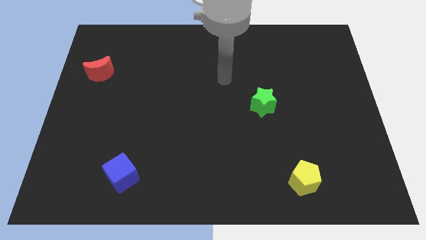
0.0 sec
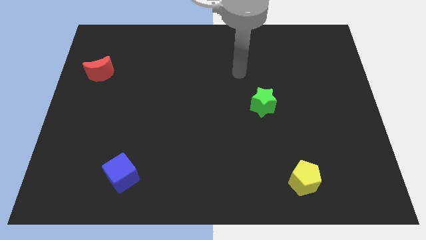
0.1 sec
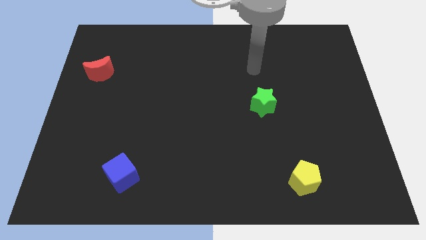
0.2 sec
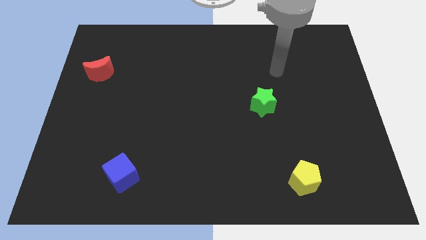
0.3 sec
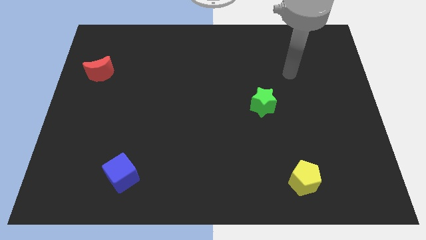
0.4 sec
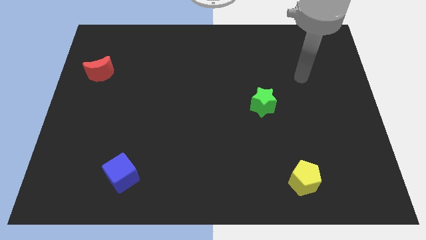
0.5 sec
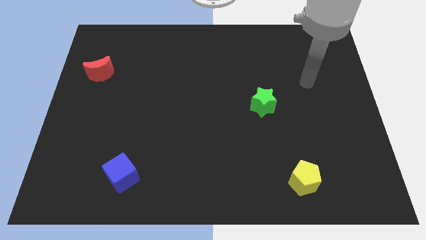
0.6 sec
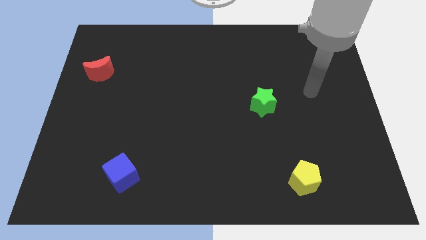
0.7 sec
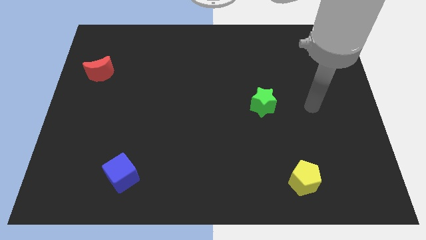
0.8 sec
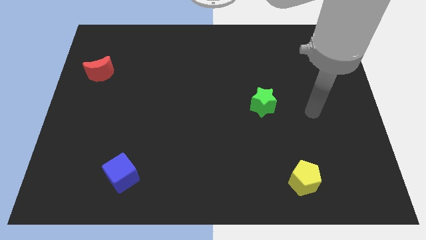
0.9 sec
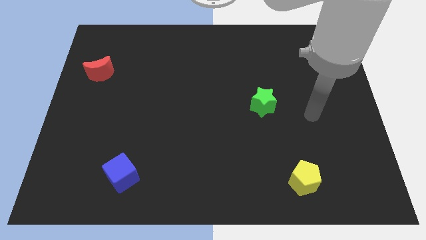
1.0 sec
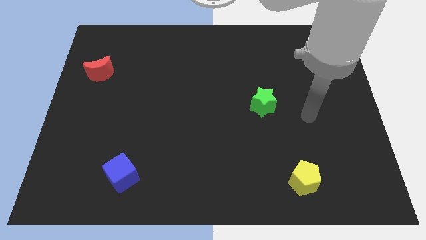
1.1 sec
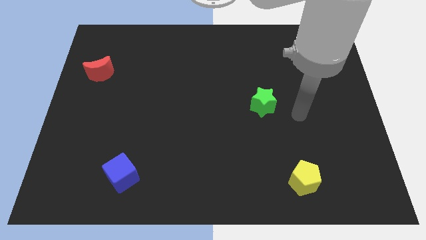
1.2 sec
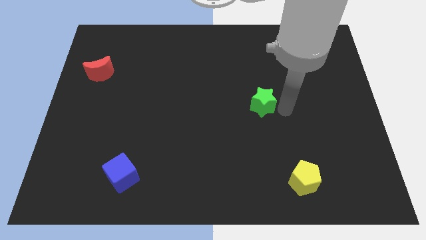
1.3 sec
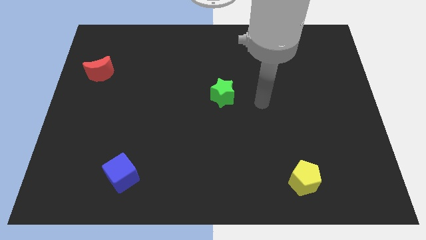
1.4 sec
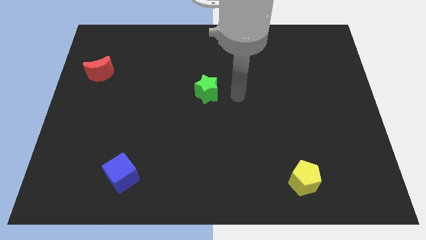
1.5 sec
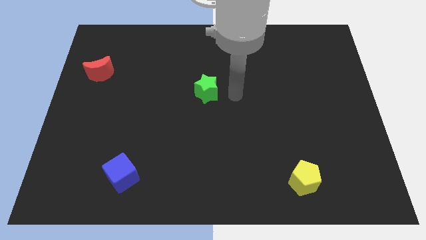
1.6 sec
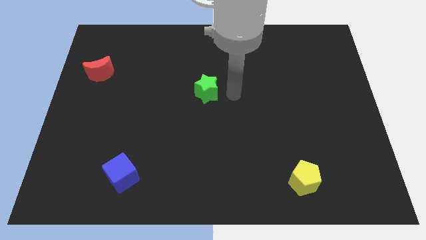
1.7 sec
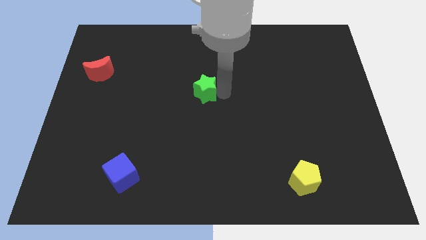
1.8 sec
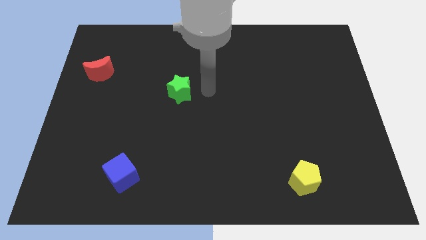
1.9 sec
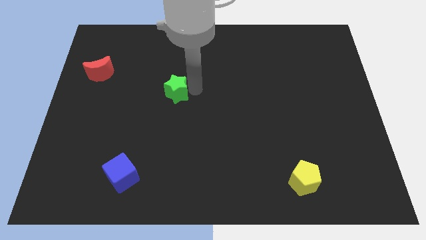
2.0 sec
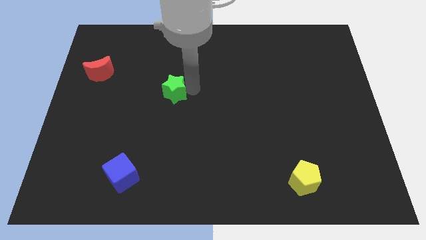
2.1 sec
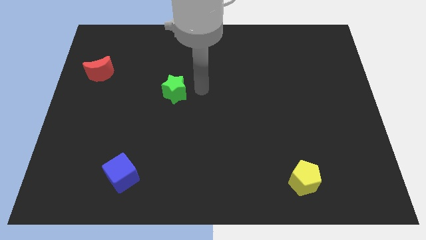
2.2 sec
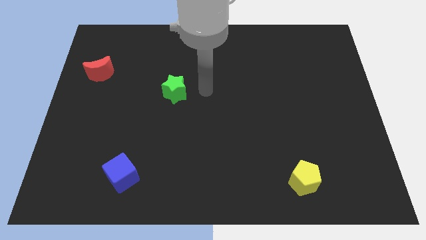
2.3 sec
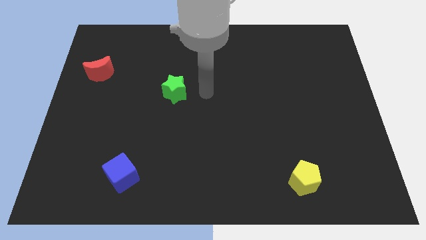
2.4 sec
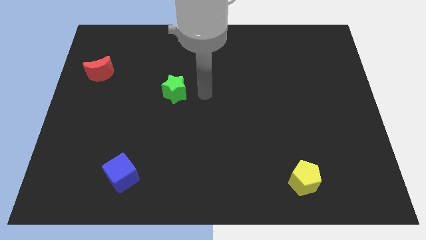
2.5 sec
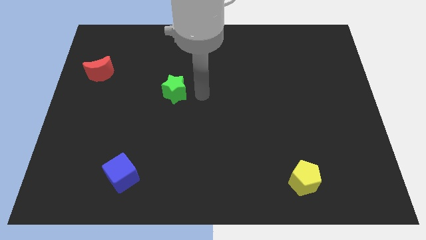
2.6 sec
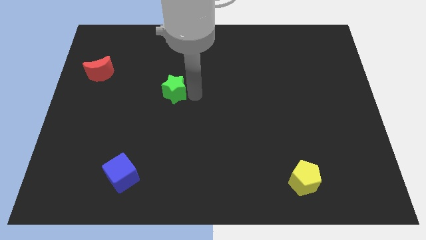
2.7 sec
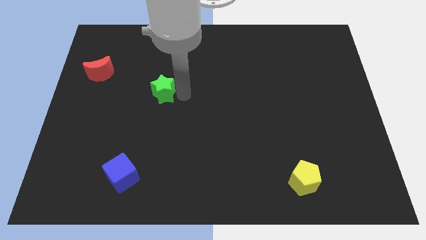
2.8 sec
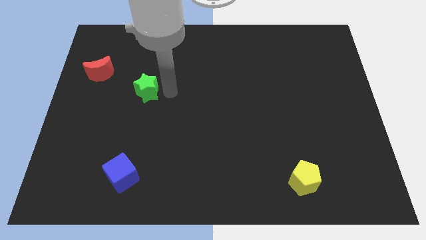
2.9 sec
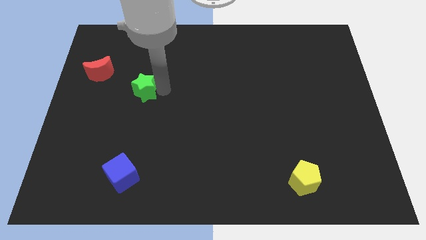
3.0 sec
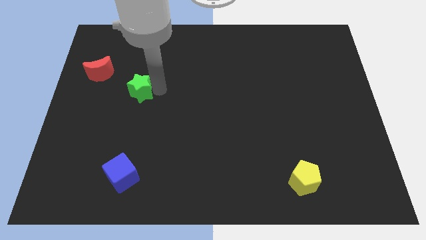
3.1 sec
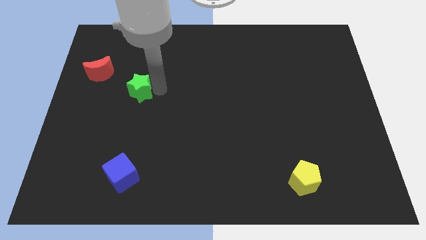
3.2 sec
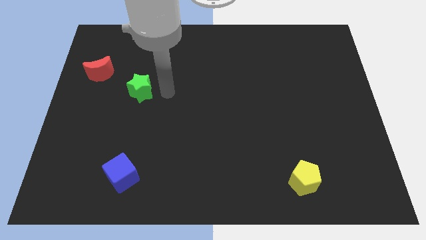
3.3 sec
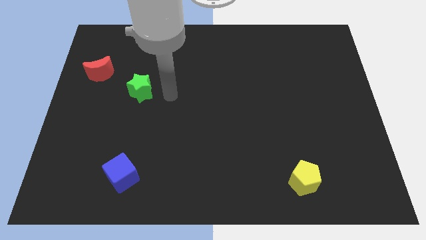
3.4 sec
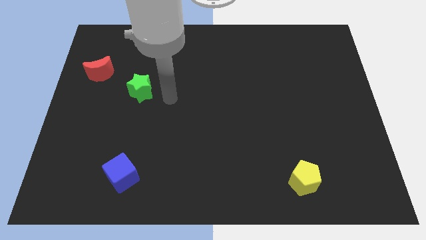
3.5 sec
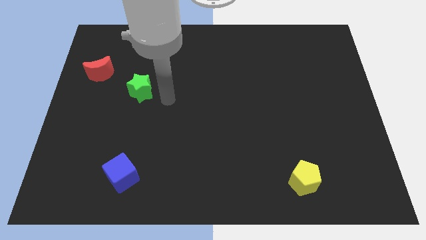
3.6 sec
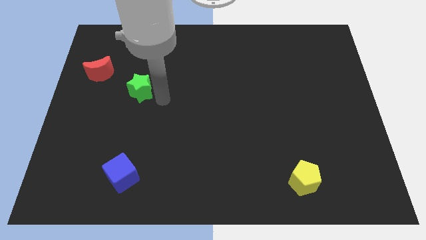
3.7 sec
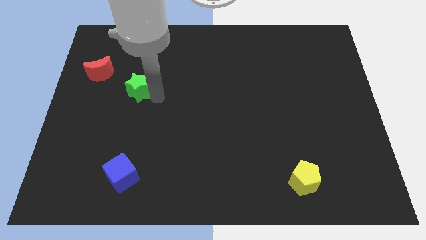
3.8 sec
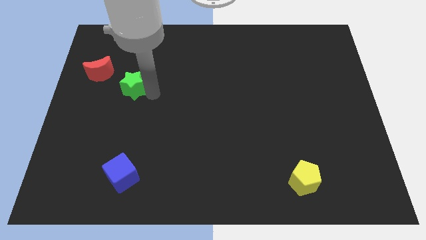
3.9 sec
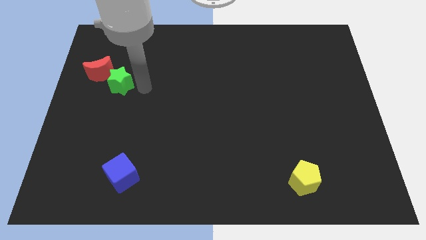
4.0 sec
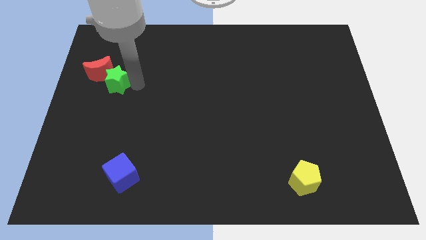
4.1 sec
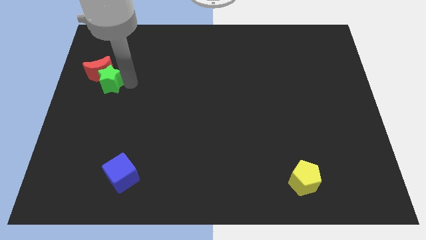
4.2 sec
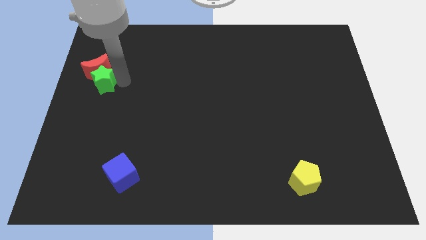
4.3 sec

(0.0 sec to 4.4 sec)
put the star towards the red block

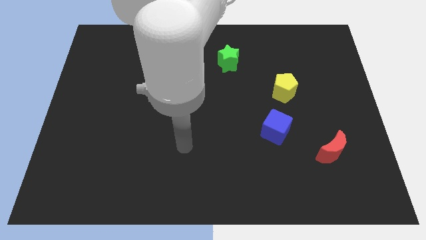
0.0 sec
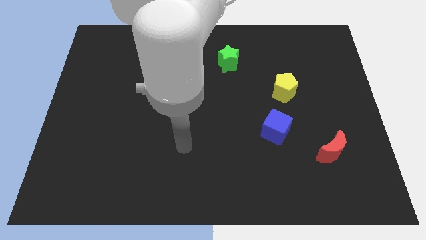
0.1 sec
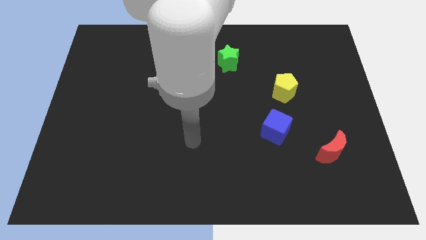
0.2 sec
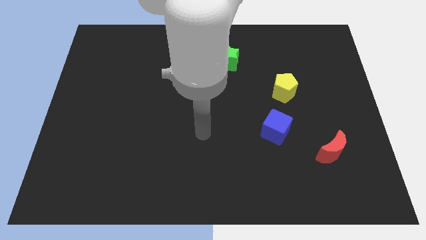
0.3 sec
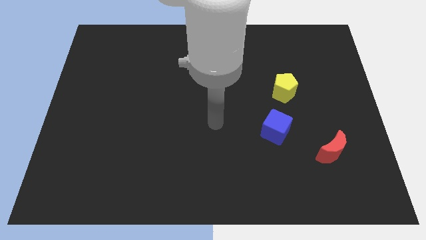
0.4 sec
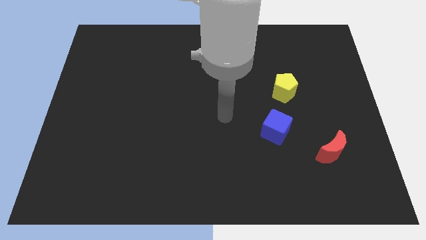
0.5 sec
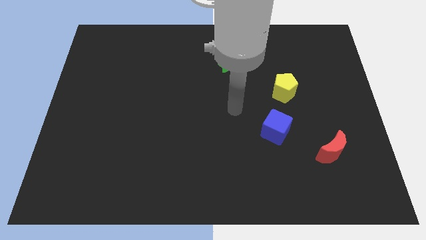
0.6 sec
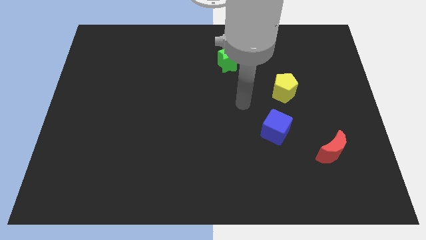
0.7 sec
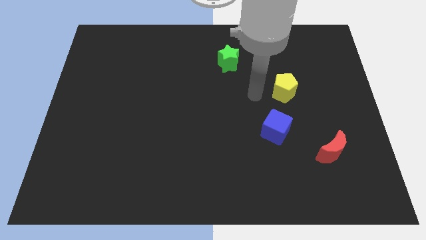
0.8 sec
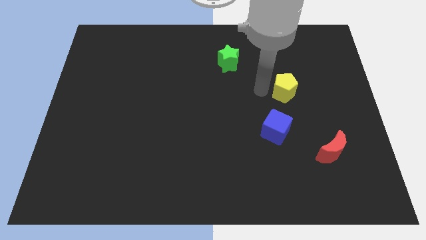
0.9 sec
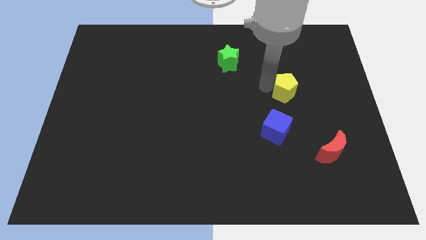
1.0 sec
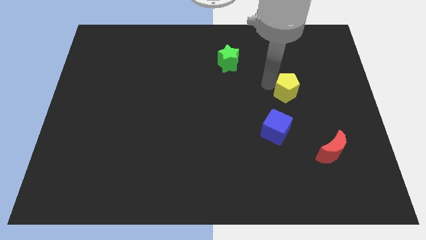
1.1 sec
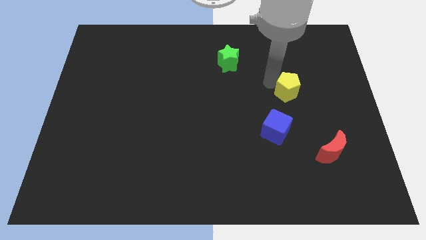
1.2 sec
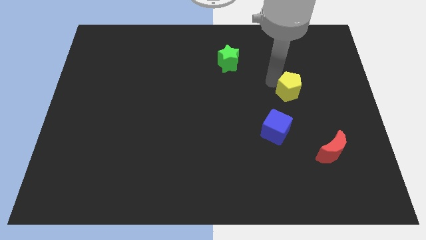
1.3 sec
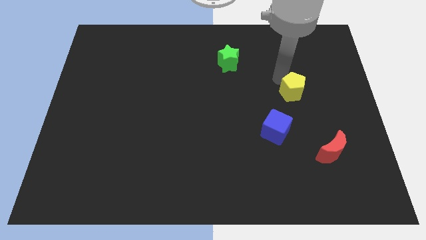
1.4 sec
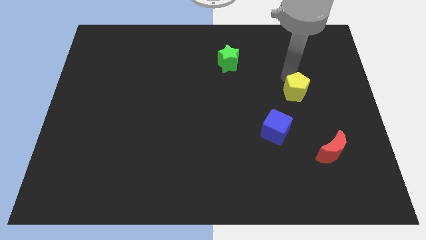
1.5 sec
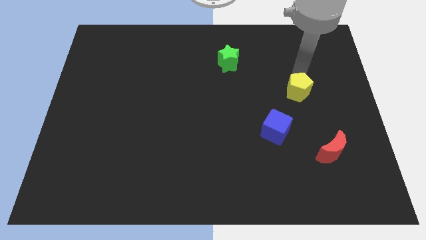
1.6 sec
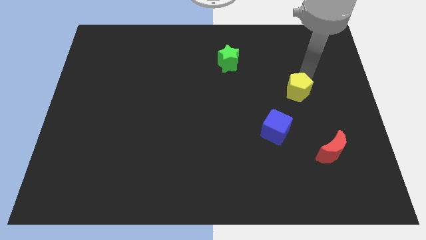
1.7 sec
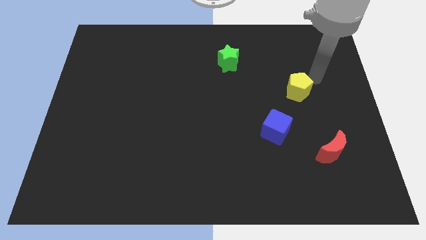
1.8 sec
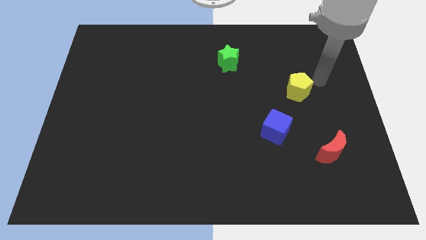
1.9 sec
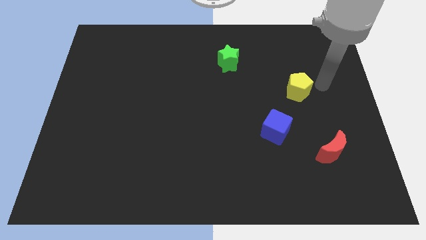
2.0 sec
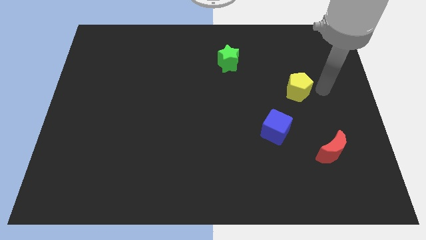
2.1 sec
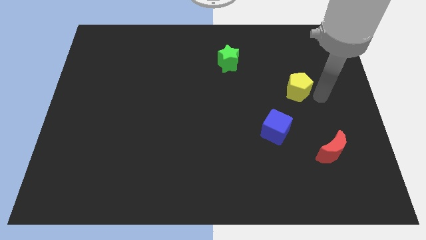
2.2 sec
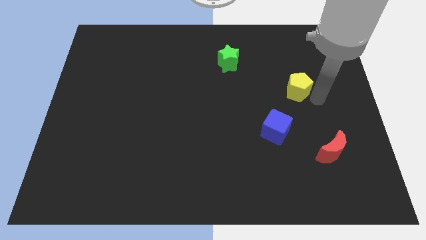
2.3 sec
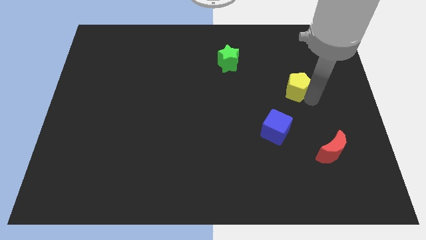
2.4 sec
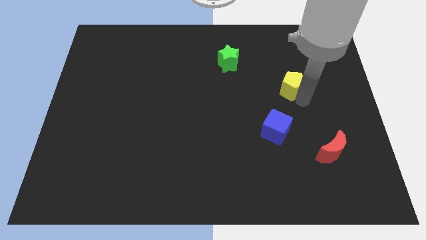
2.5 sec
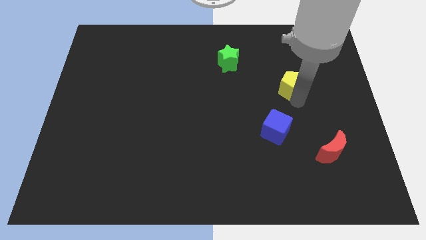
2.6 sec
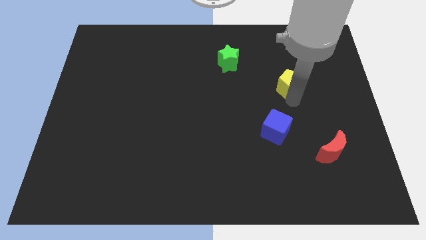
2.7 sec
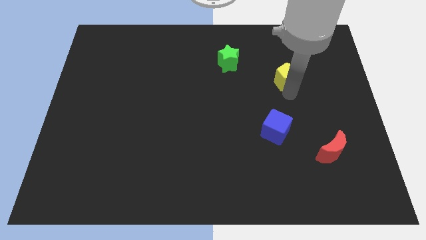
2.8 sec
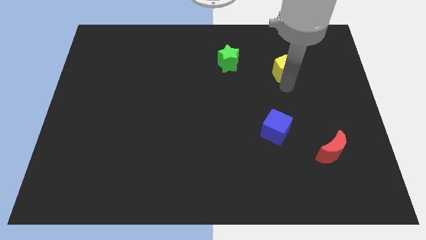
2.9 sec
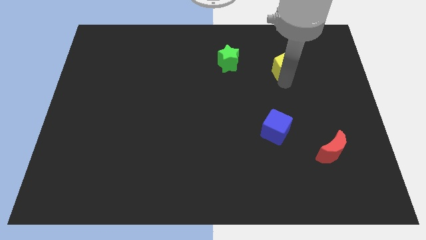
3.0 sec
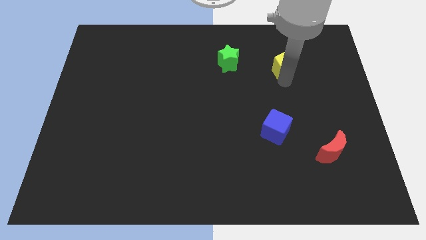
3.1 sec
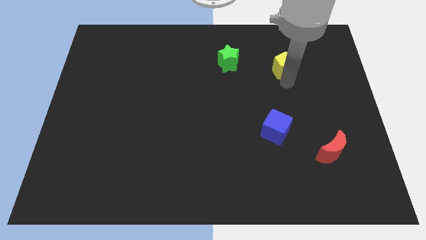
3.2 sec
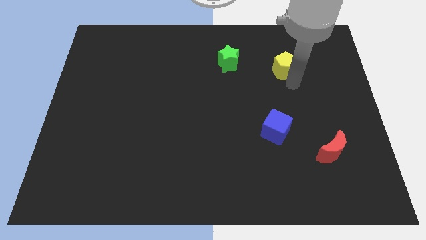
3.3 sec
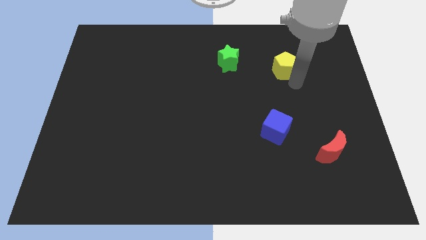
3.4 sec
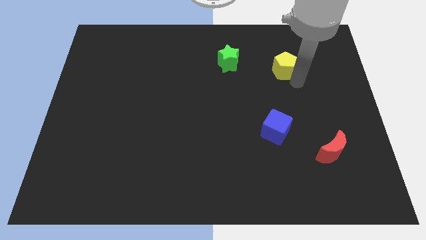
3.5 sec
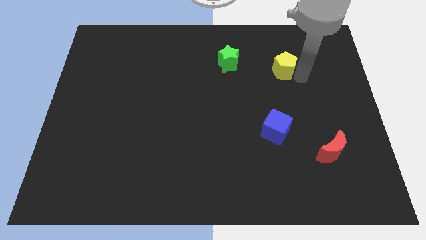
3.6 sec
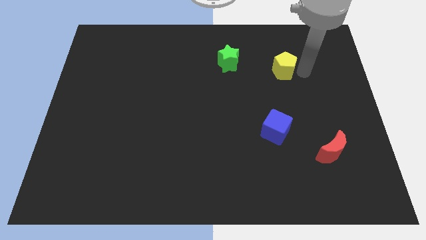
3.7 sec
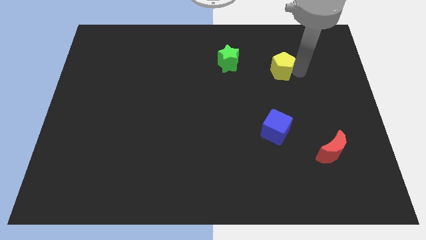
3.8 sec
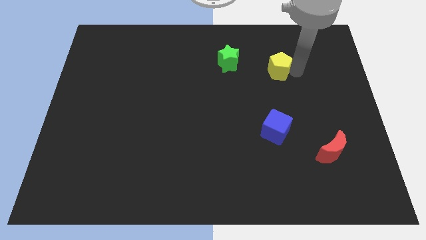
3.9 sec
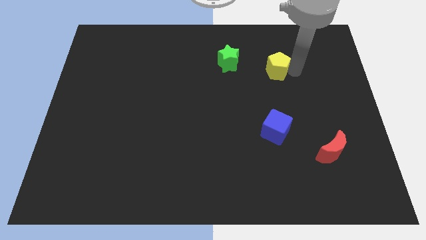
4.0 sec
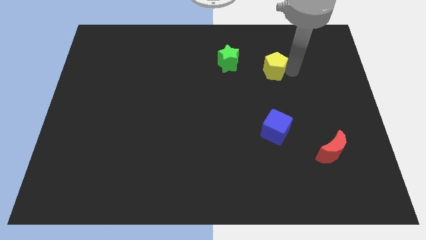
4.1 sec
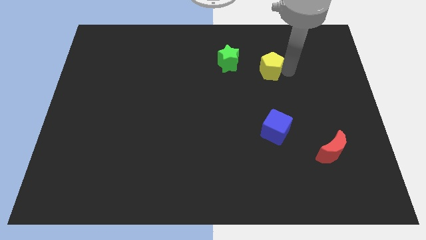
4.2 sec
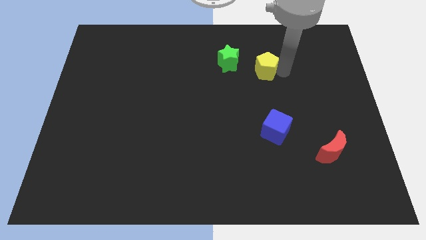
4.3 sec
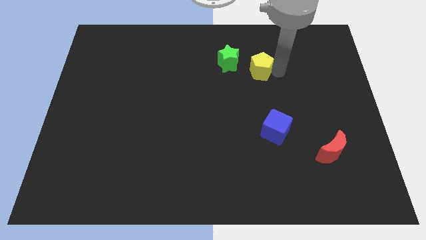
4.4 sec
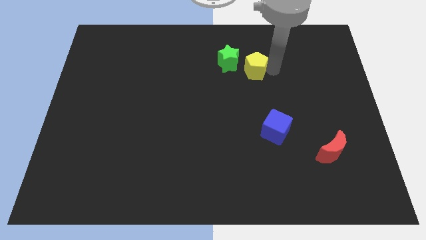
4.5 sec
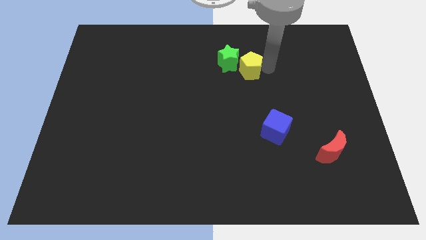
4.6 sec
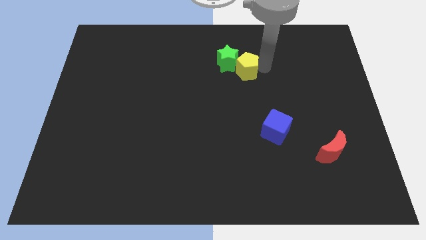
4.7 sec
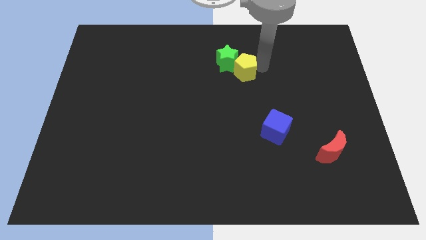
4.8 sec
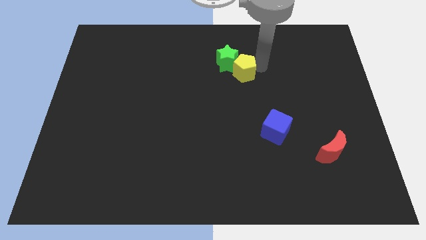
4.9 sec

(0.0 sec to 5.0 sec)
put the pentagon to the star
